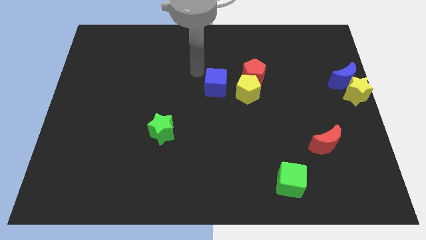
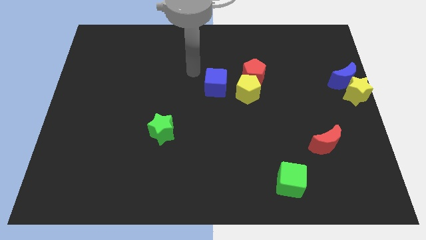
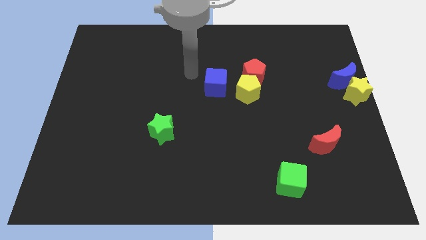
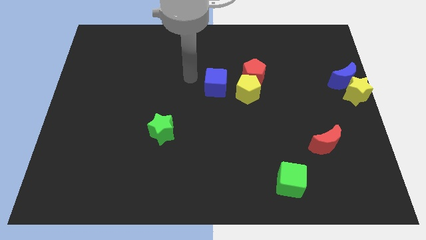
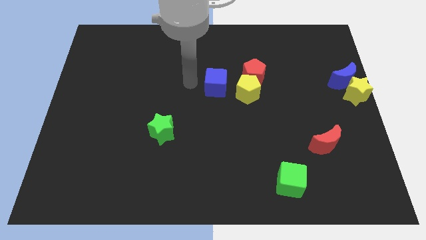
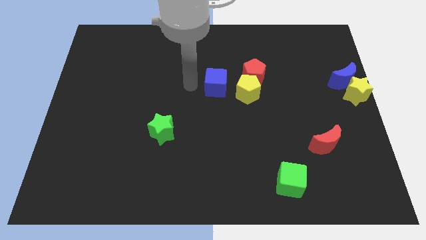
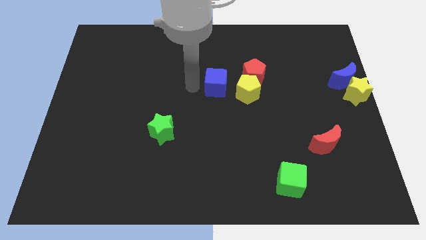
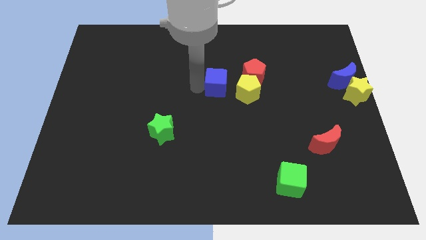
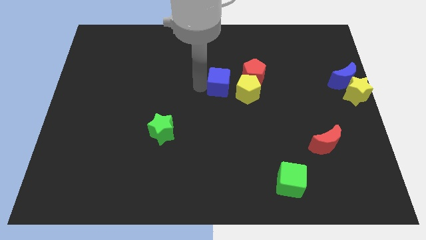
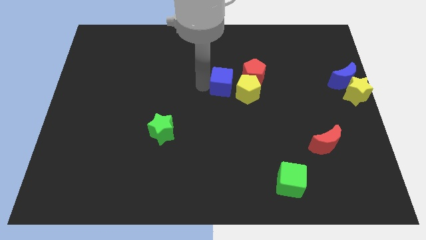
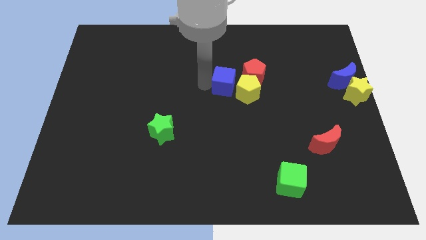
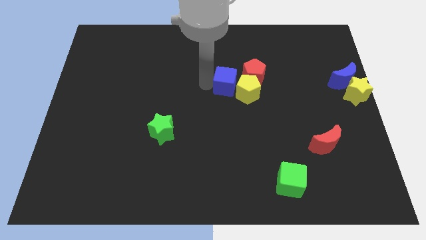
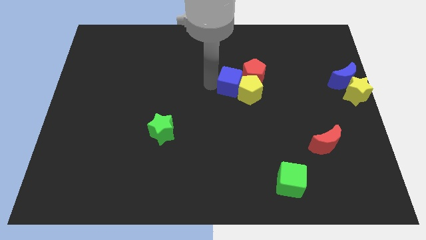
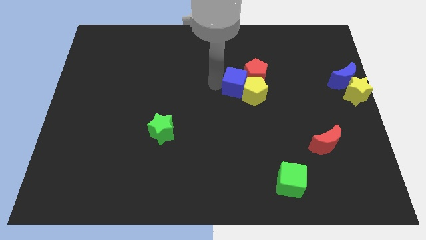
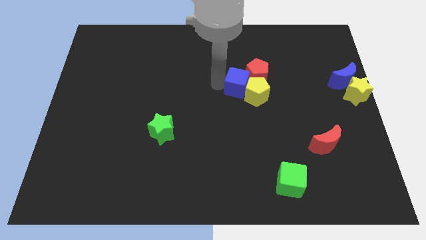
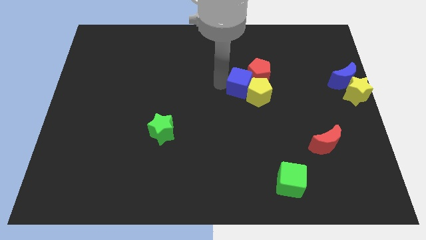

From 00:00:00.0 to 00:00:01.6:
push the blue cube into the yellow pentagon

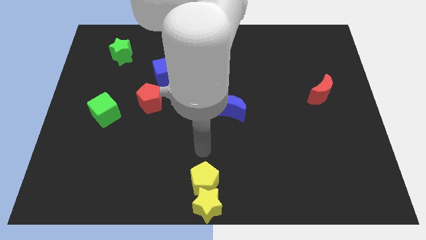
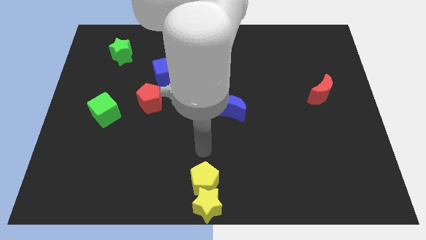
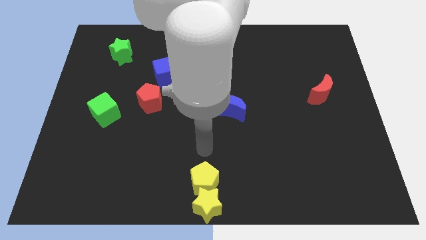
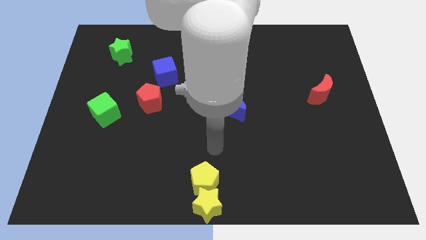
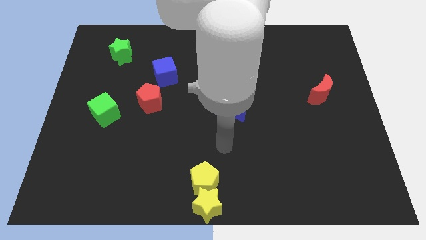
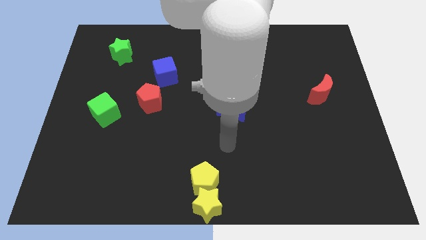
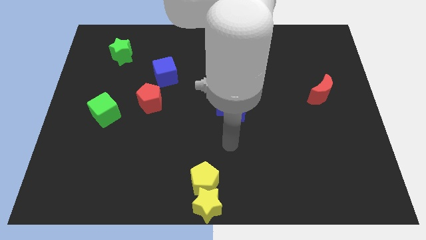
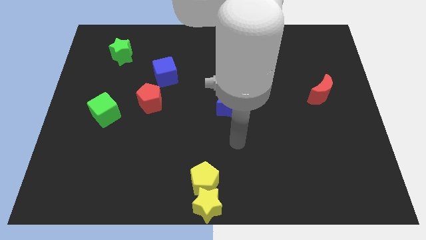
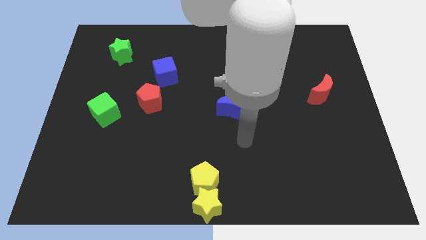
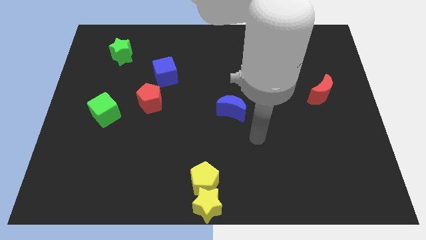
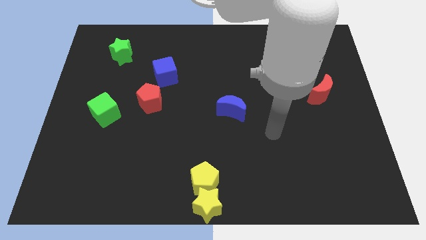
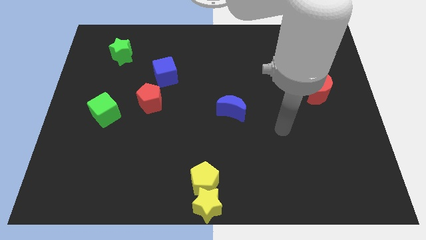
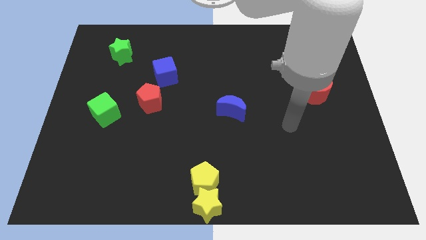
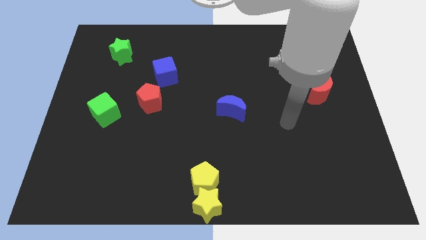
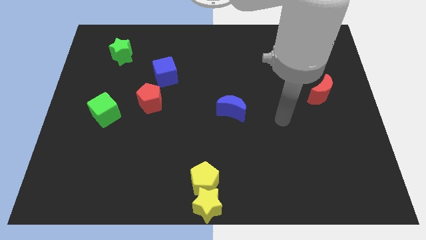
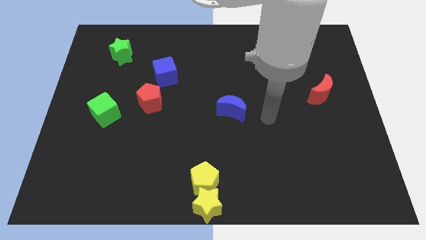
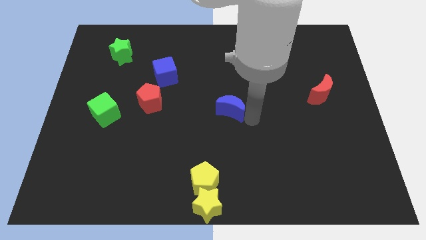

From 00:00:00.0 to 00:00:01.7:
place your arm to the right of blue moon

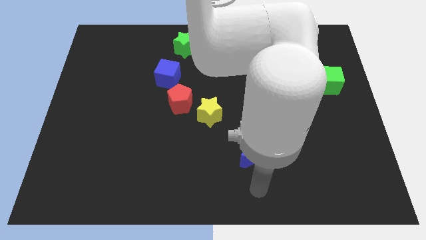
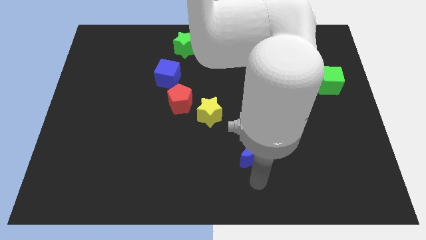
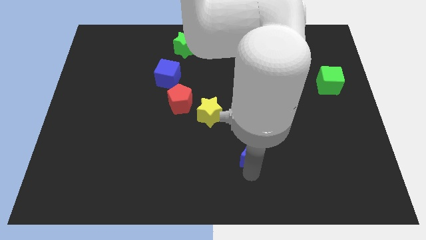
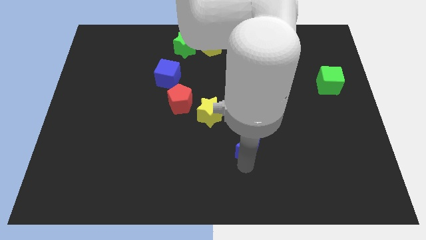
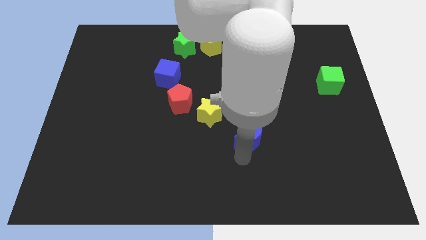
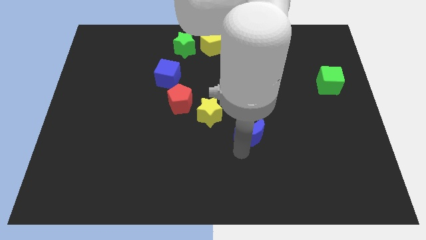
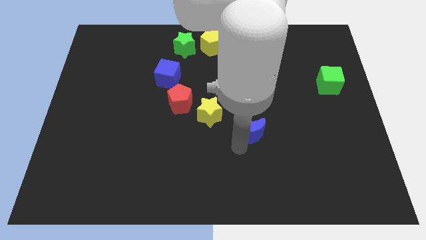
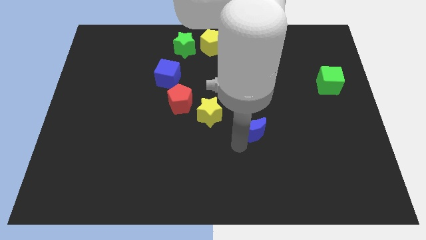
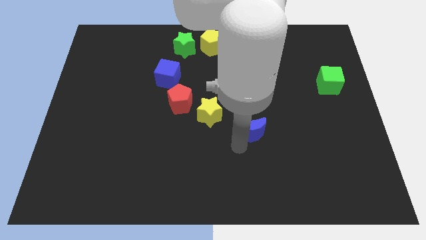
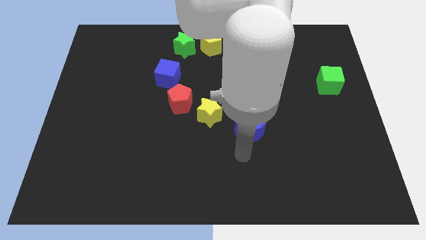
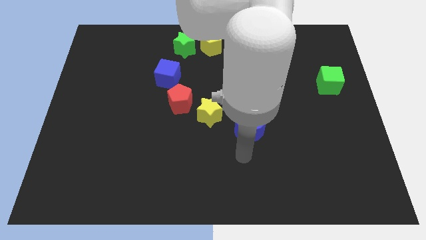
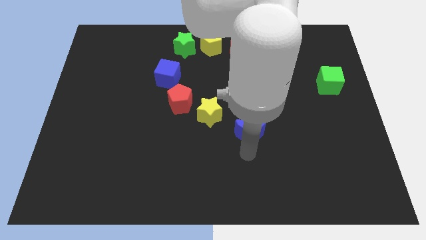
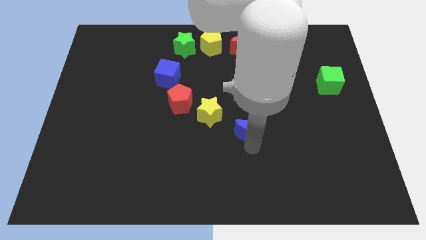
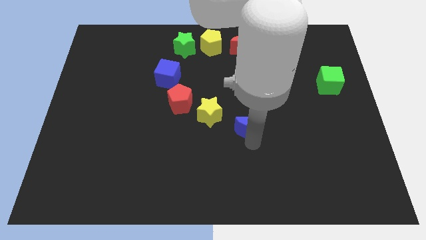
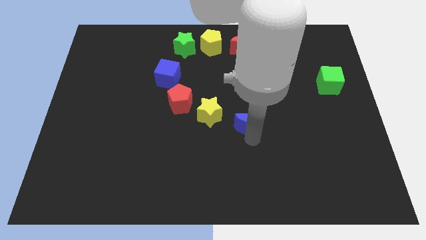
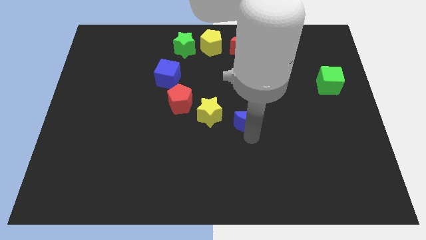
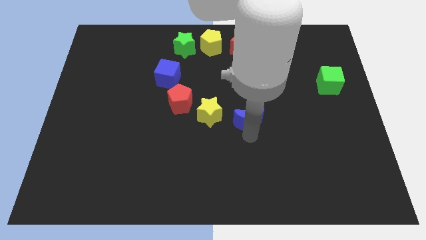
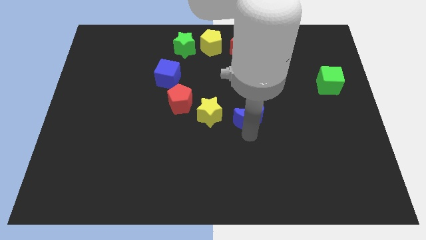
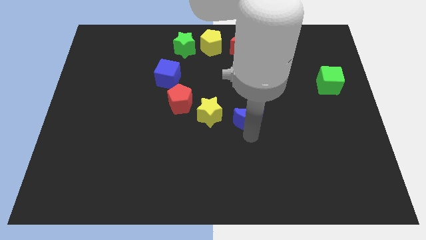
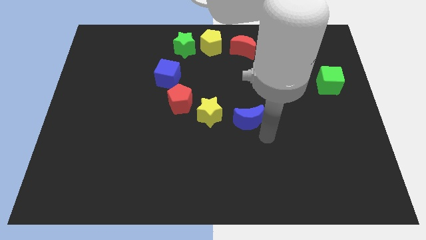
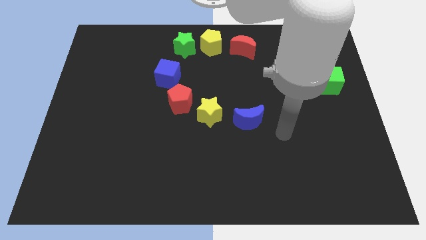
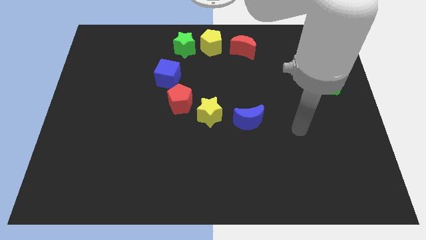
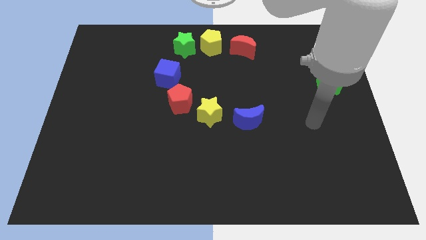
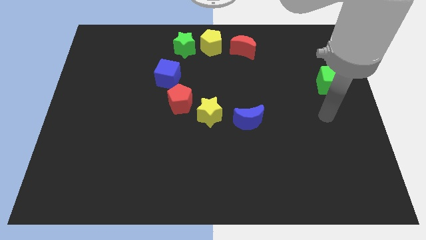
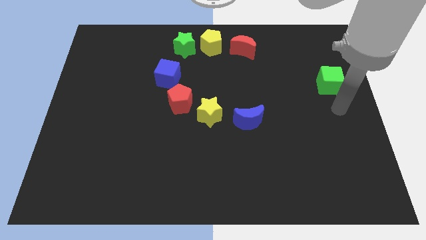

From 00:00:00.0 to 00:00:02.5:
push the blue moon right to the yellow star

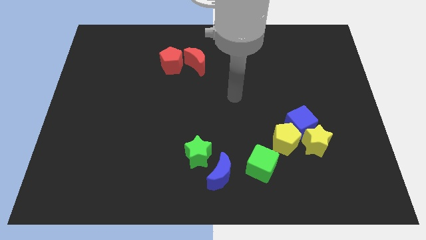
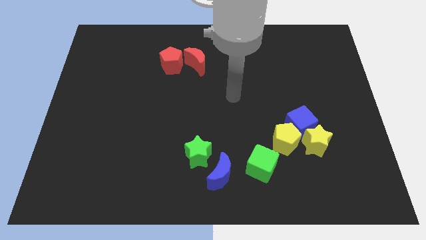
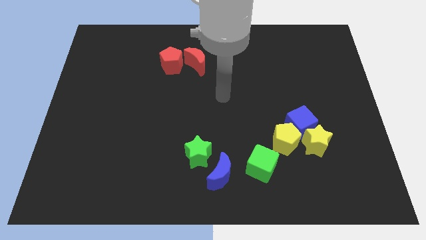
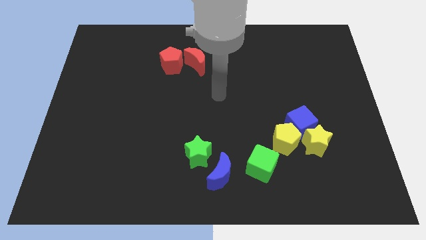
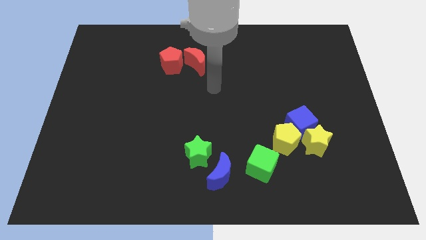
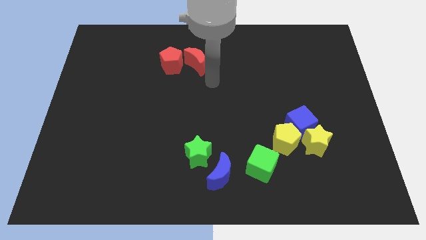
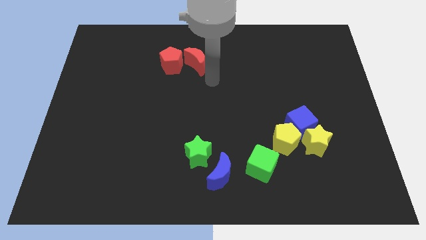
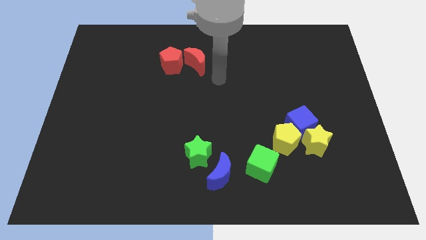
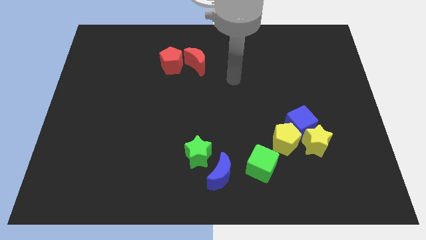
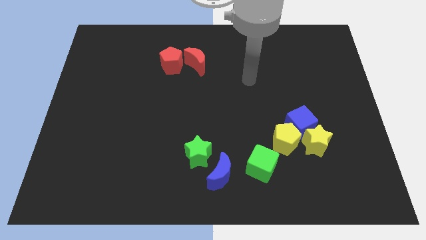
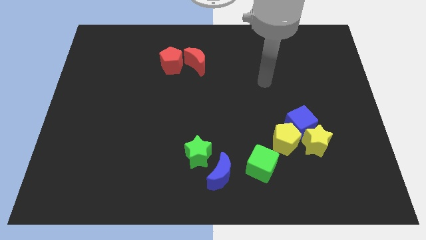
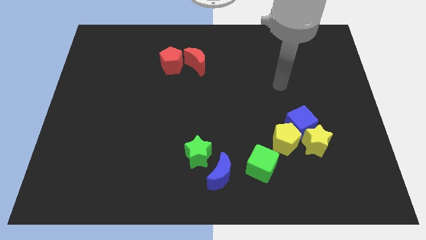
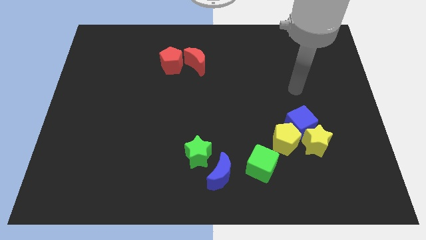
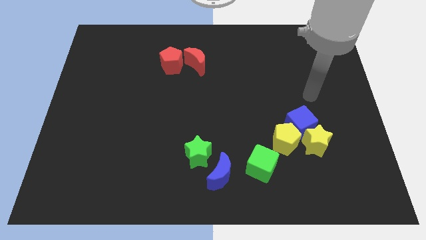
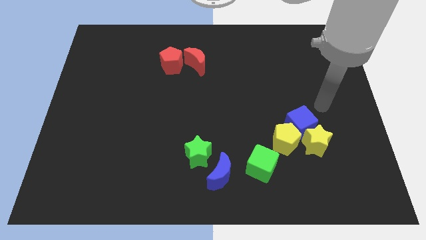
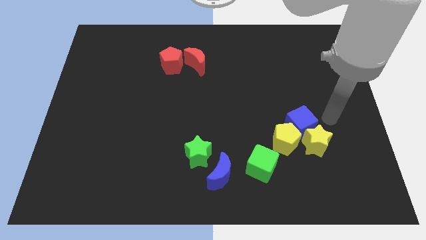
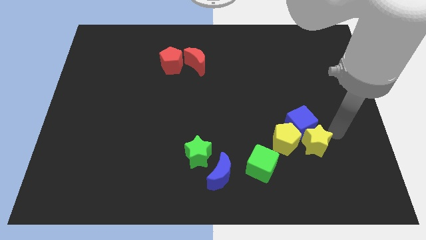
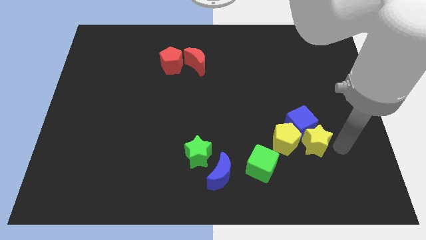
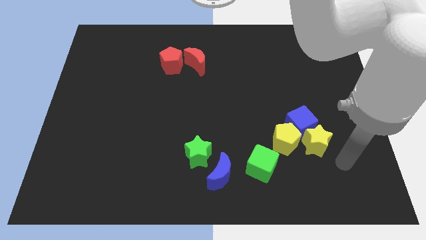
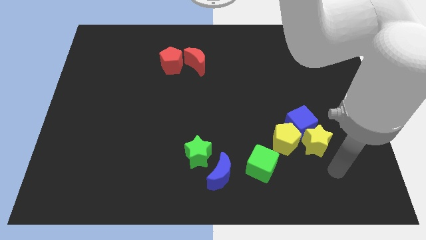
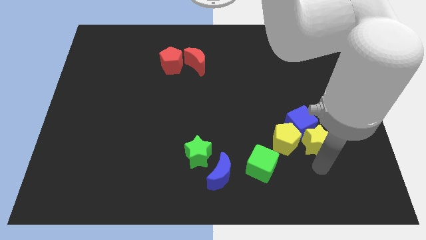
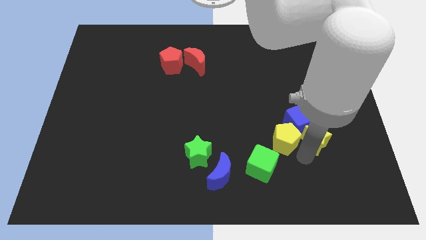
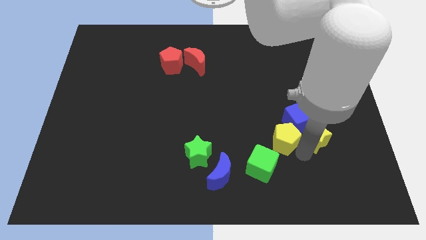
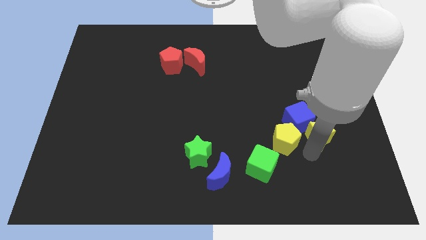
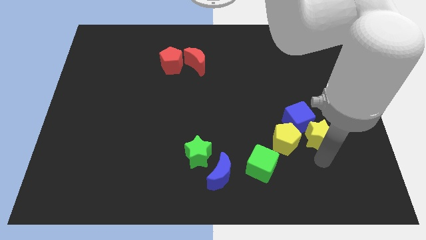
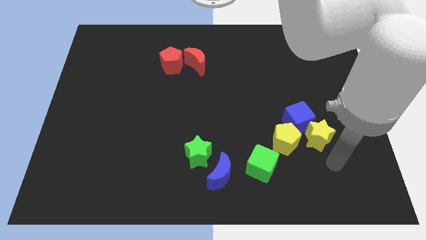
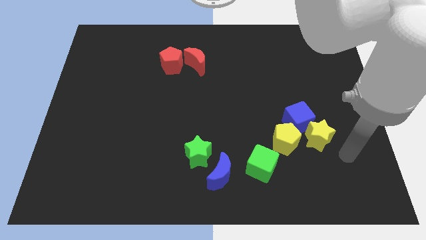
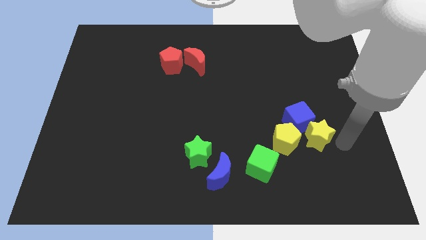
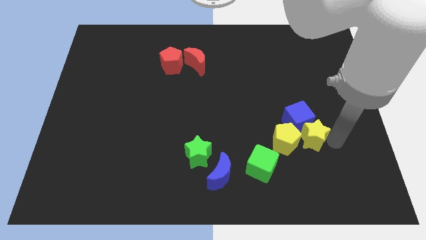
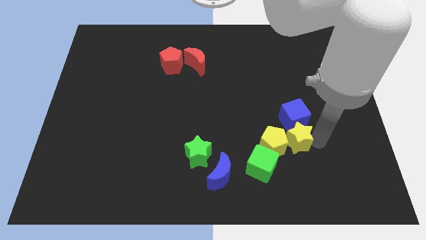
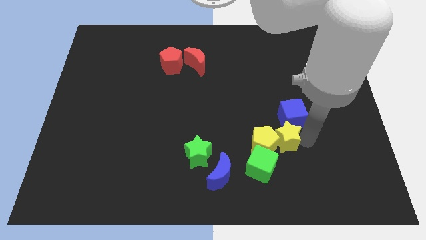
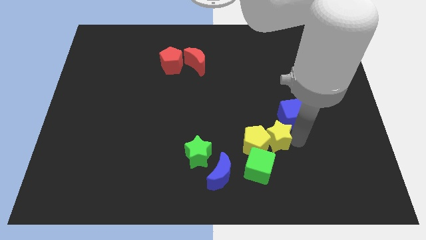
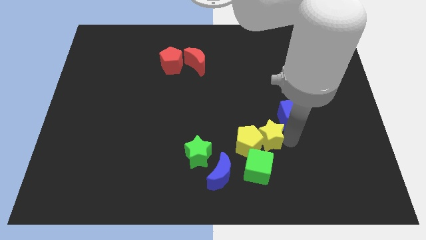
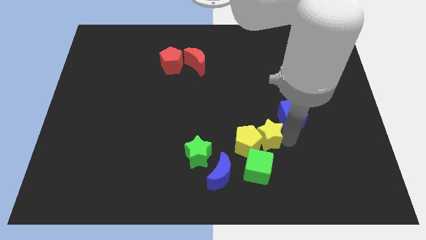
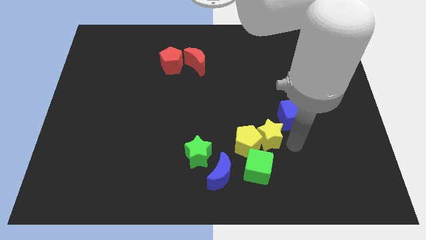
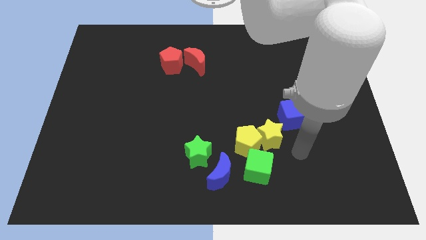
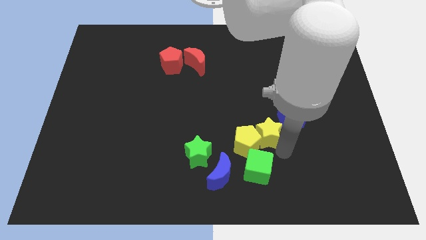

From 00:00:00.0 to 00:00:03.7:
place yellow star to the top of the green cube
